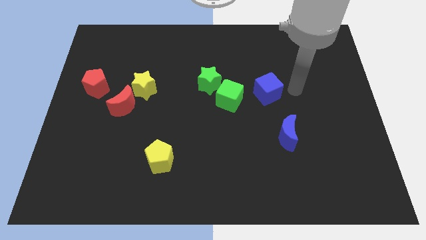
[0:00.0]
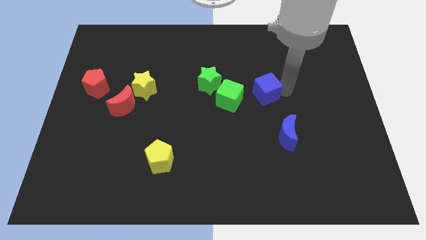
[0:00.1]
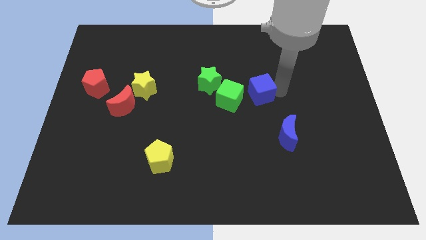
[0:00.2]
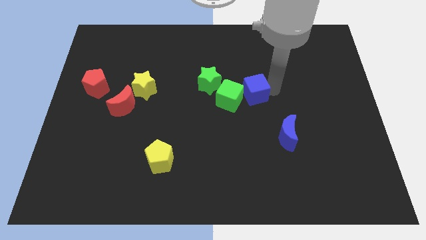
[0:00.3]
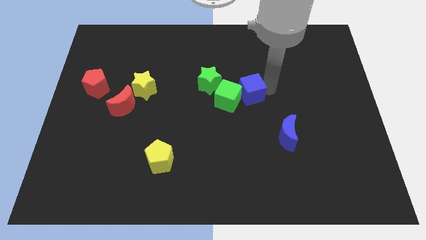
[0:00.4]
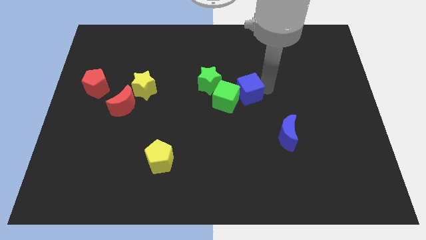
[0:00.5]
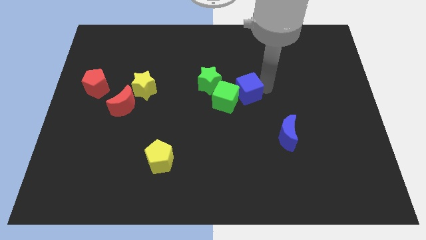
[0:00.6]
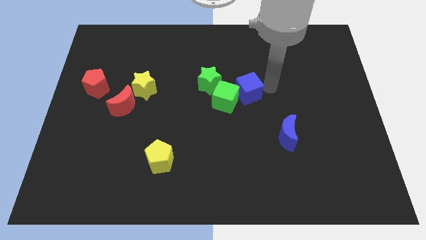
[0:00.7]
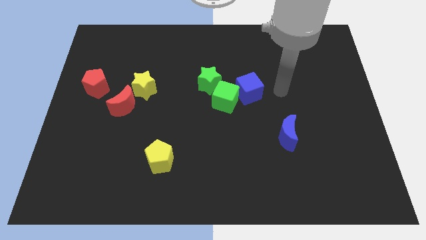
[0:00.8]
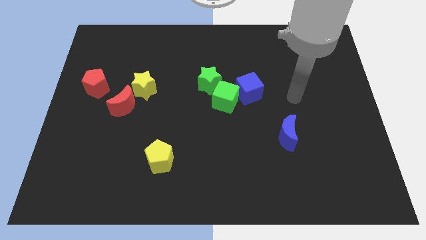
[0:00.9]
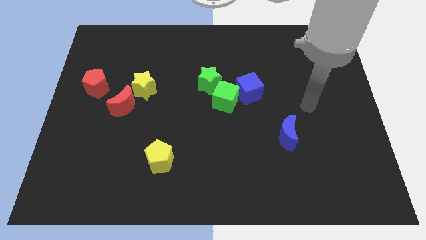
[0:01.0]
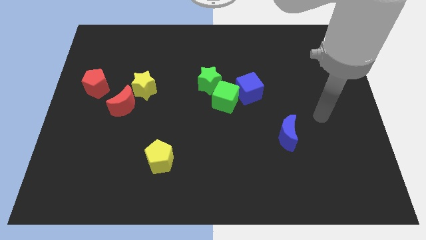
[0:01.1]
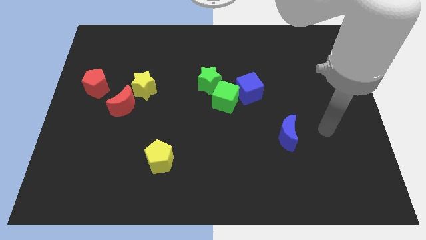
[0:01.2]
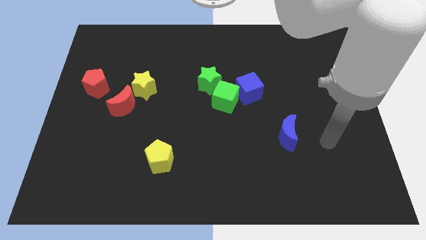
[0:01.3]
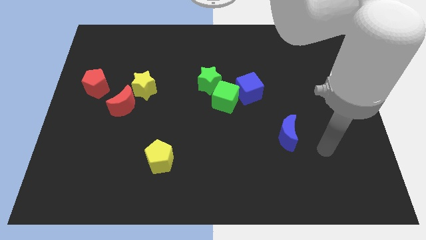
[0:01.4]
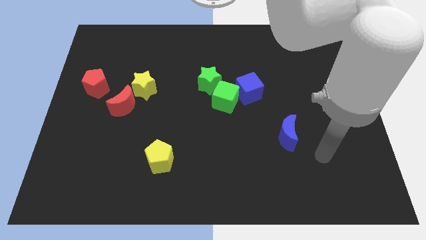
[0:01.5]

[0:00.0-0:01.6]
drag the blue cube to the left

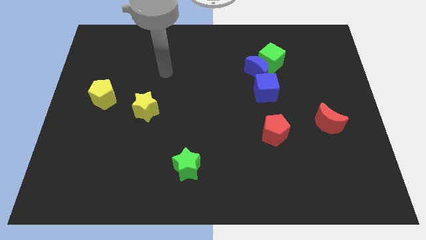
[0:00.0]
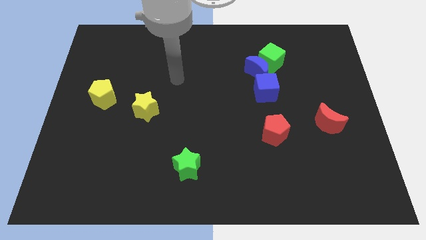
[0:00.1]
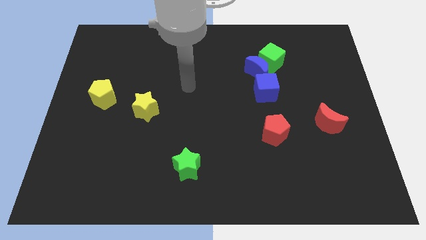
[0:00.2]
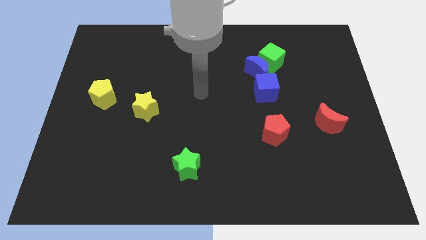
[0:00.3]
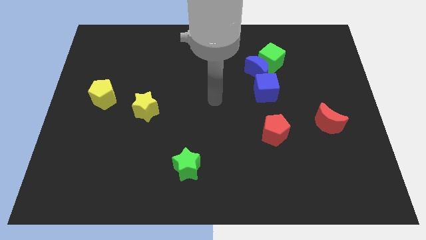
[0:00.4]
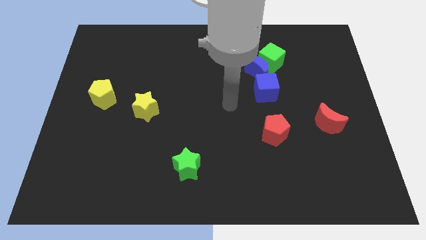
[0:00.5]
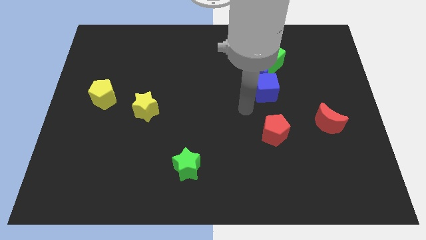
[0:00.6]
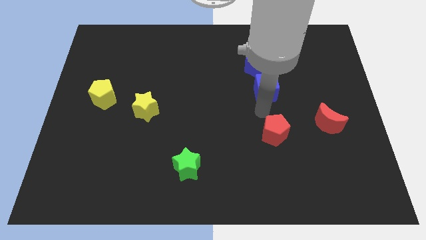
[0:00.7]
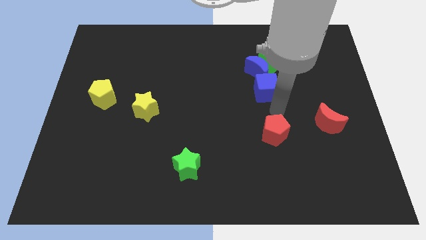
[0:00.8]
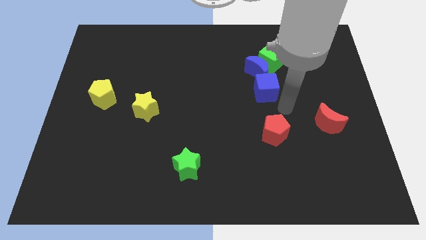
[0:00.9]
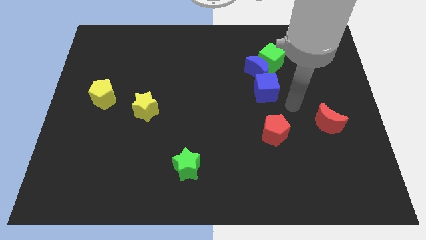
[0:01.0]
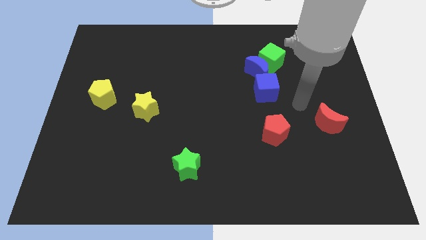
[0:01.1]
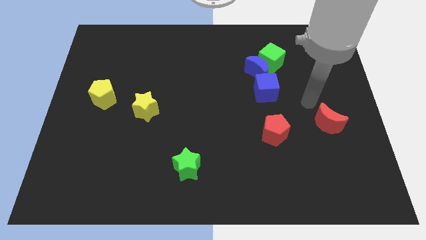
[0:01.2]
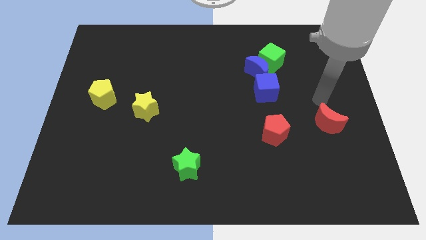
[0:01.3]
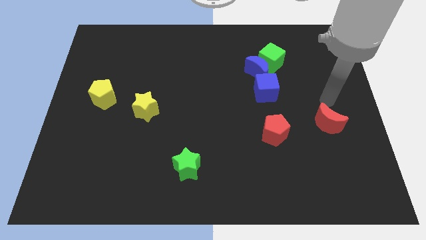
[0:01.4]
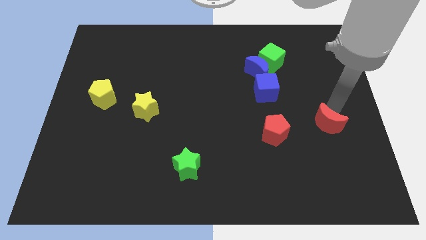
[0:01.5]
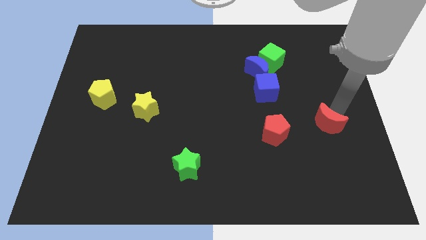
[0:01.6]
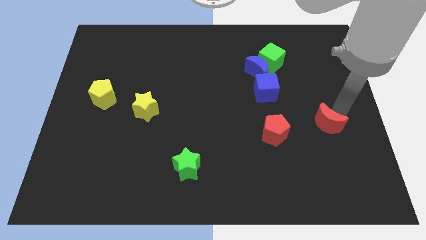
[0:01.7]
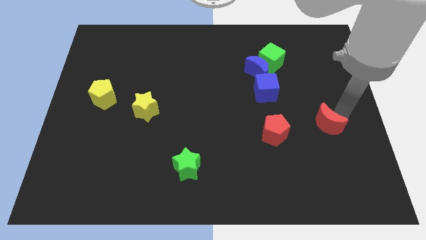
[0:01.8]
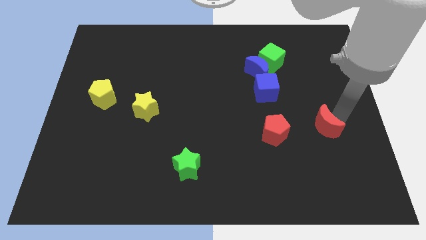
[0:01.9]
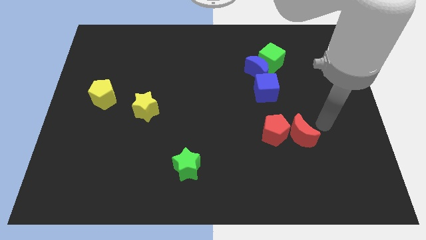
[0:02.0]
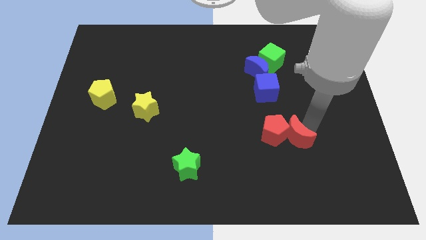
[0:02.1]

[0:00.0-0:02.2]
slide the red moon into the red pentagon

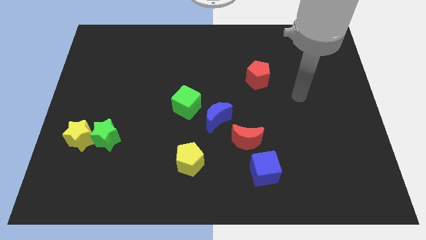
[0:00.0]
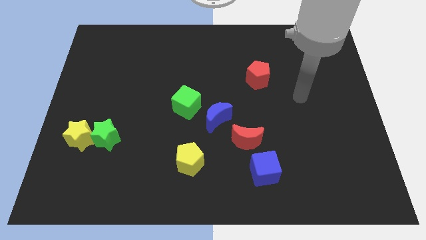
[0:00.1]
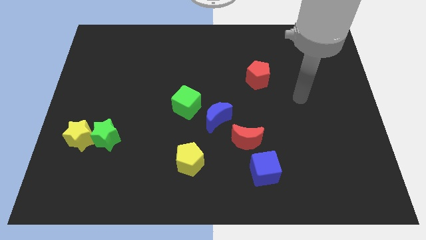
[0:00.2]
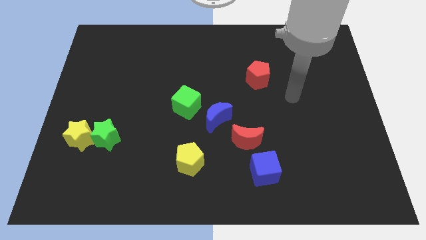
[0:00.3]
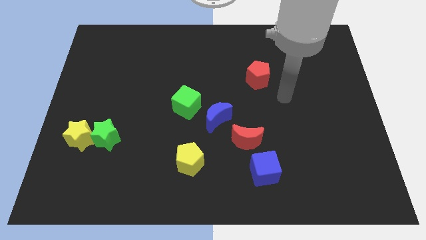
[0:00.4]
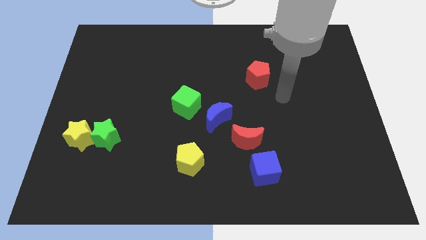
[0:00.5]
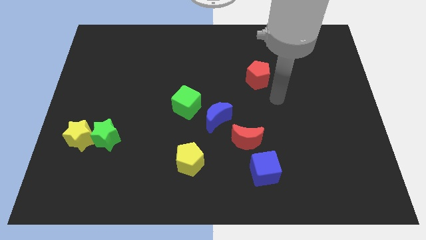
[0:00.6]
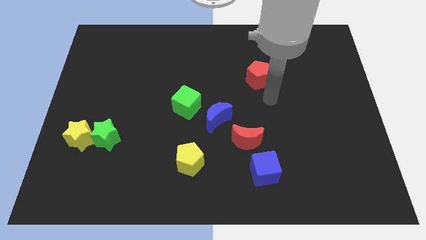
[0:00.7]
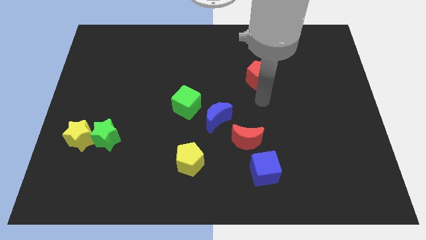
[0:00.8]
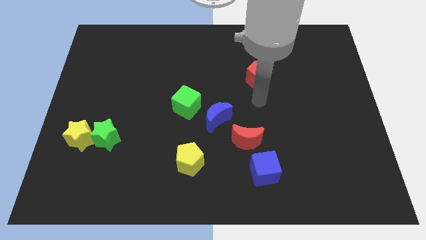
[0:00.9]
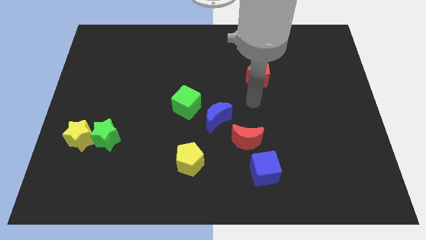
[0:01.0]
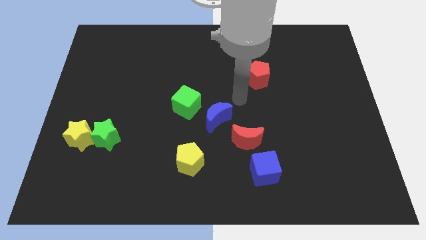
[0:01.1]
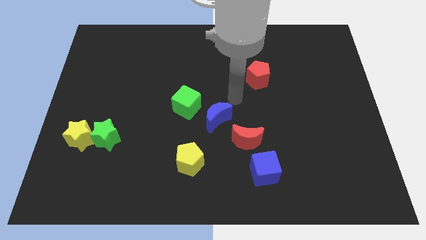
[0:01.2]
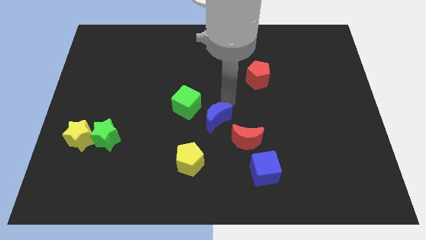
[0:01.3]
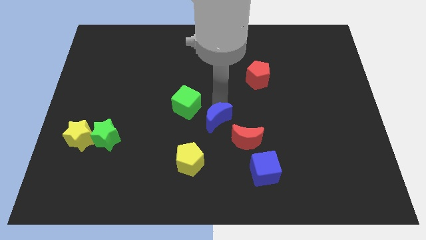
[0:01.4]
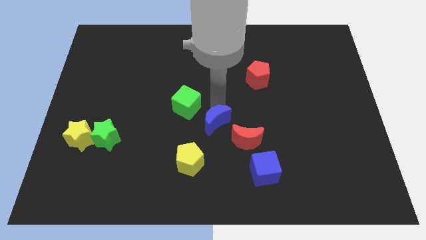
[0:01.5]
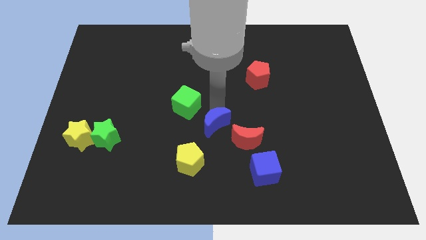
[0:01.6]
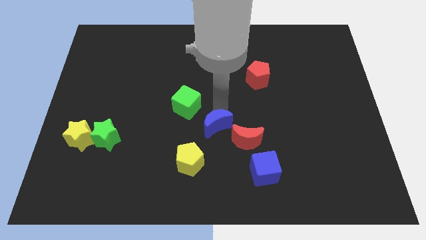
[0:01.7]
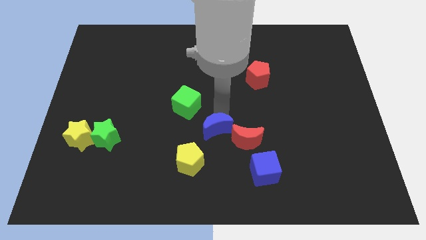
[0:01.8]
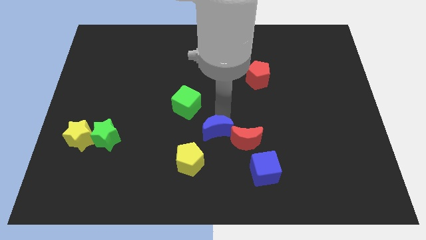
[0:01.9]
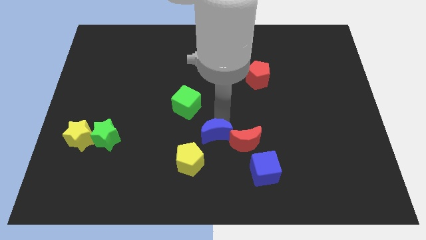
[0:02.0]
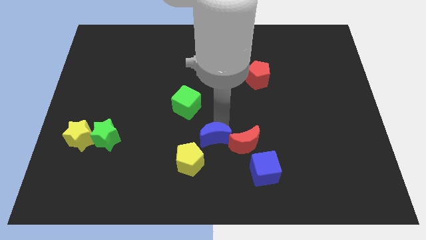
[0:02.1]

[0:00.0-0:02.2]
push the blue moon into the red moon

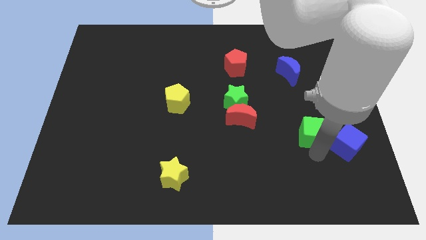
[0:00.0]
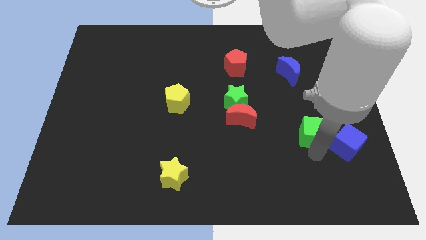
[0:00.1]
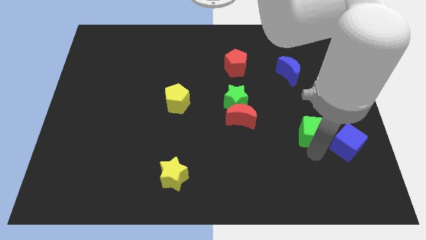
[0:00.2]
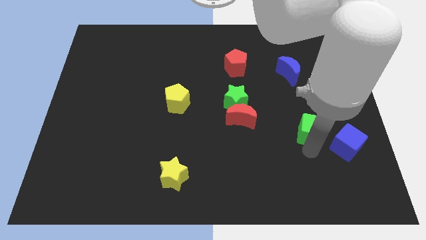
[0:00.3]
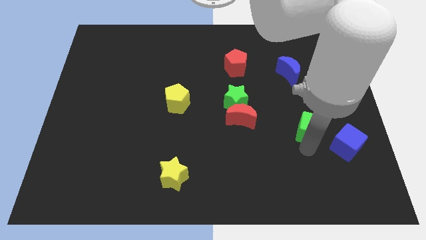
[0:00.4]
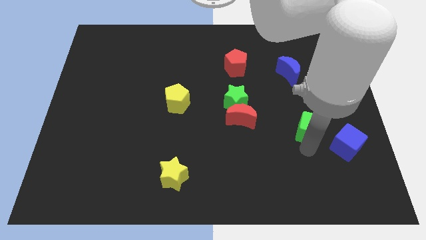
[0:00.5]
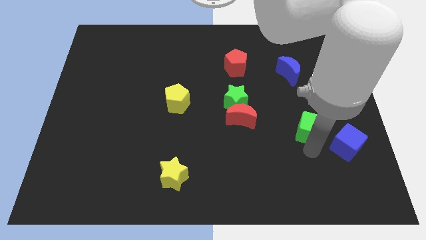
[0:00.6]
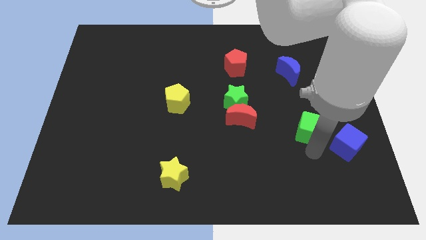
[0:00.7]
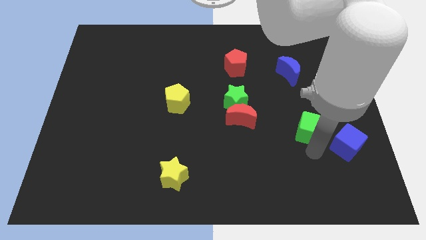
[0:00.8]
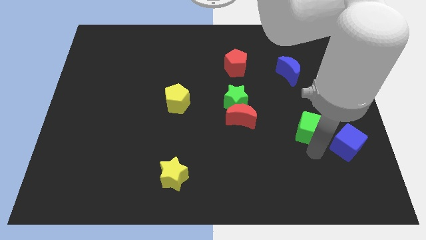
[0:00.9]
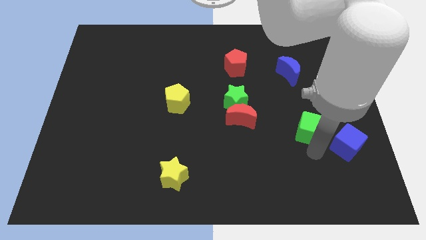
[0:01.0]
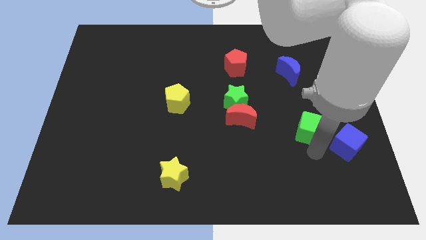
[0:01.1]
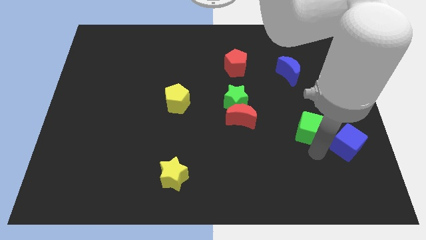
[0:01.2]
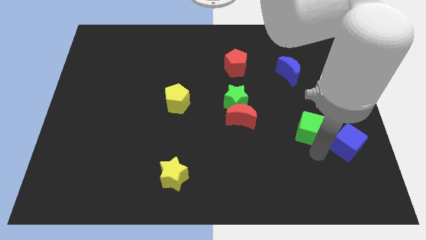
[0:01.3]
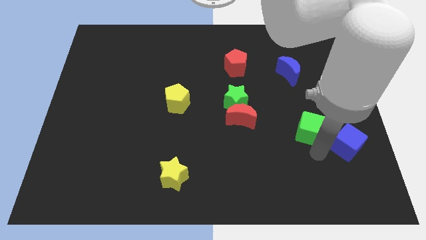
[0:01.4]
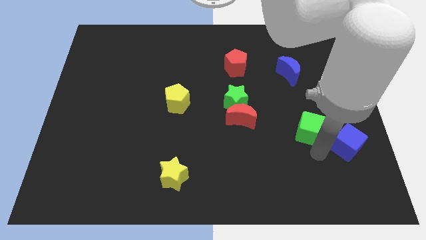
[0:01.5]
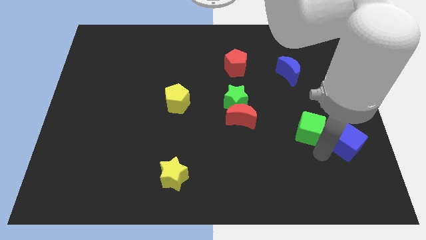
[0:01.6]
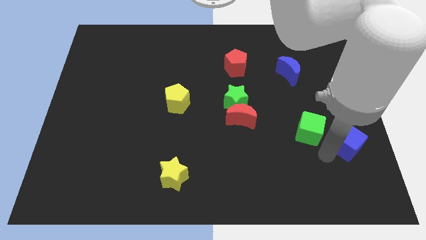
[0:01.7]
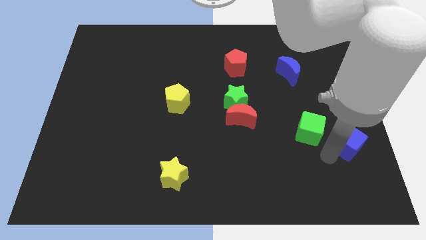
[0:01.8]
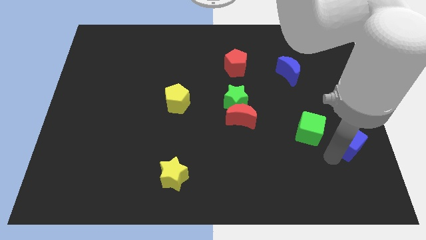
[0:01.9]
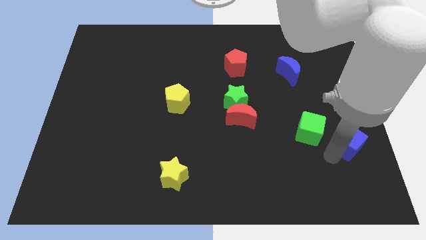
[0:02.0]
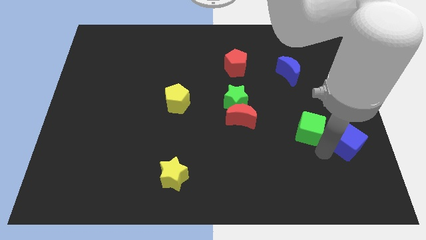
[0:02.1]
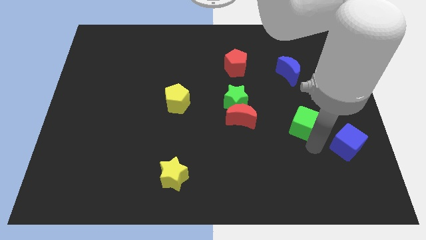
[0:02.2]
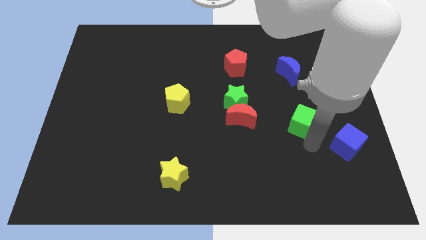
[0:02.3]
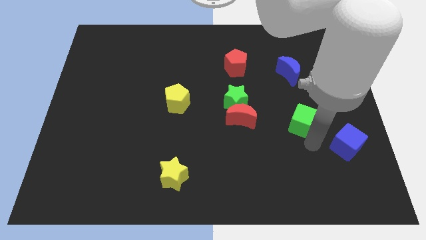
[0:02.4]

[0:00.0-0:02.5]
push green cube upwards

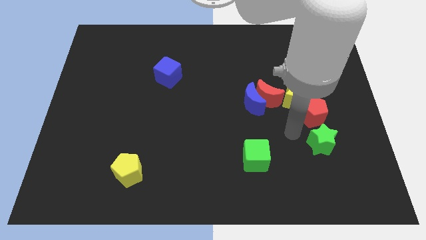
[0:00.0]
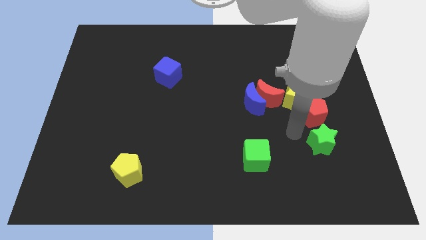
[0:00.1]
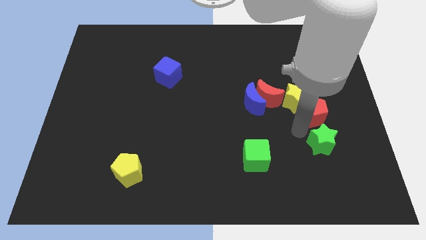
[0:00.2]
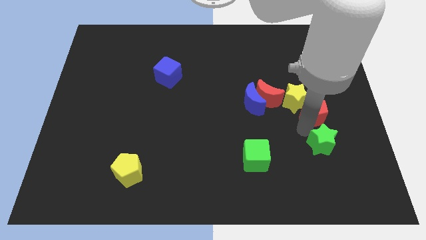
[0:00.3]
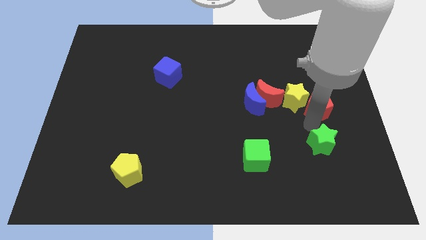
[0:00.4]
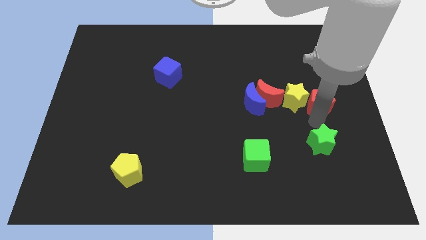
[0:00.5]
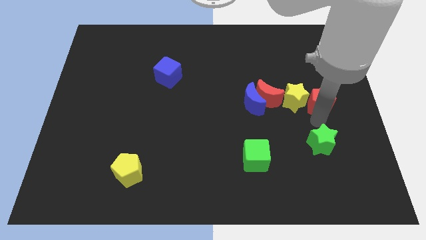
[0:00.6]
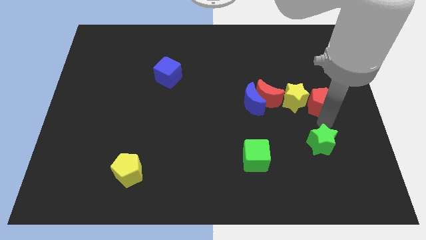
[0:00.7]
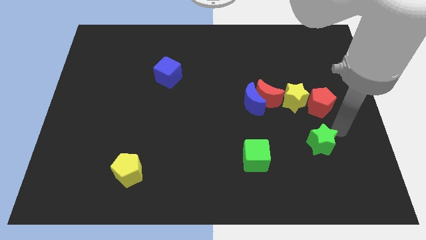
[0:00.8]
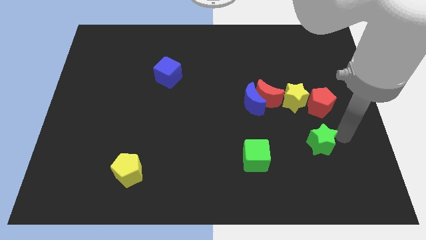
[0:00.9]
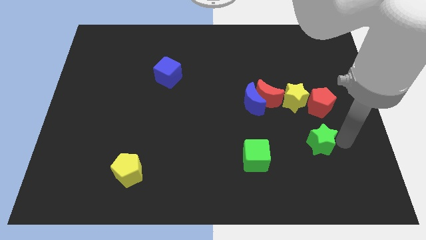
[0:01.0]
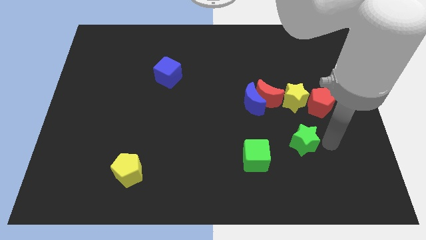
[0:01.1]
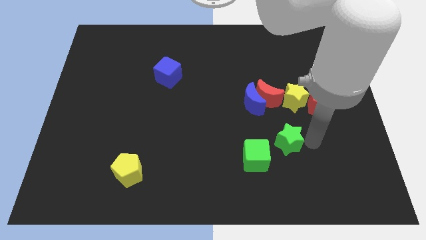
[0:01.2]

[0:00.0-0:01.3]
move the green star to the top right side of the green cube
